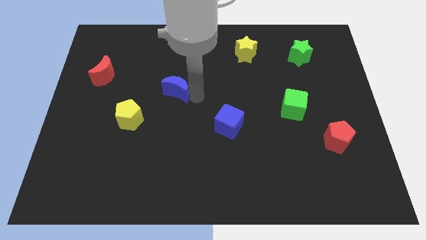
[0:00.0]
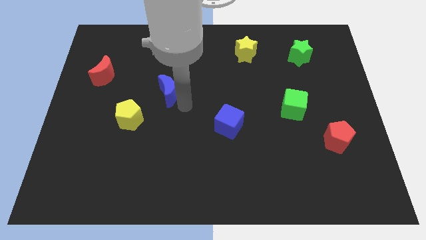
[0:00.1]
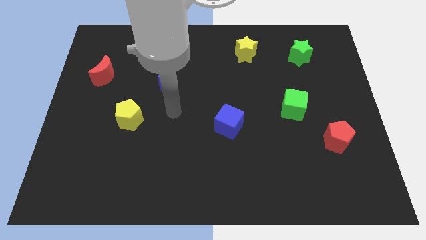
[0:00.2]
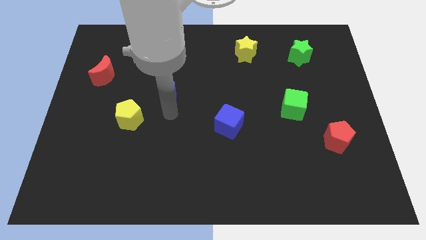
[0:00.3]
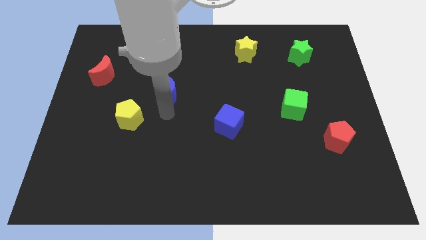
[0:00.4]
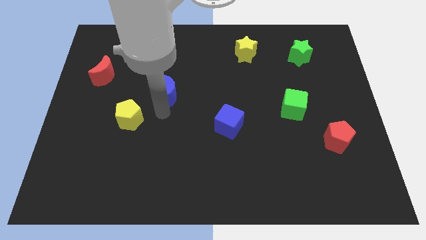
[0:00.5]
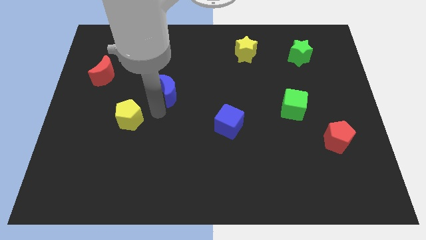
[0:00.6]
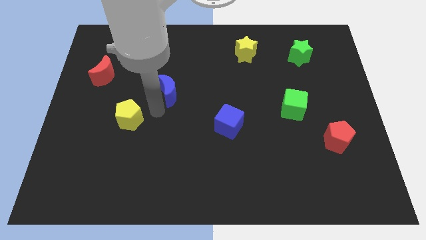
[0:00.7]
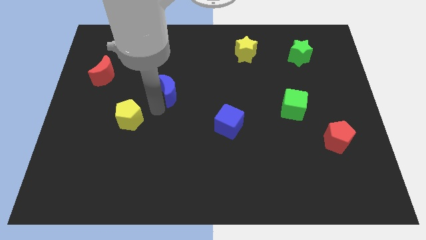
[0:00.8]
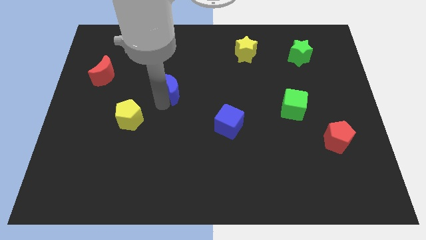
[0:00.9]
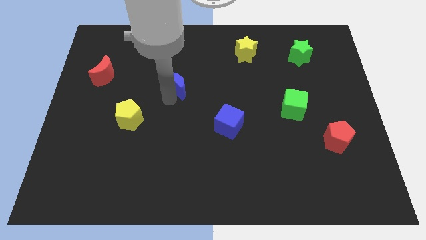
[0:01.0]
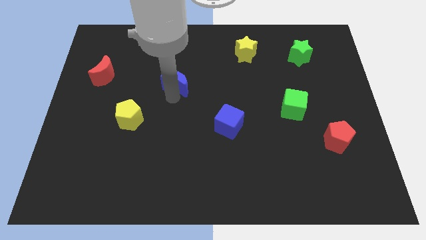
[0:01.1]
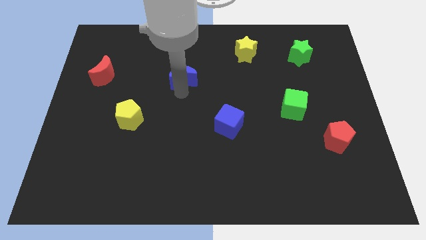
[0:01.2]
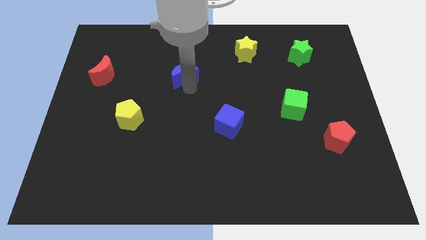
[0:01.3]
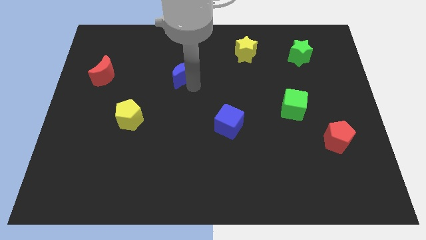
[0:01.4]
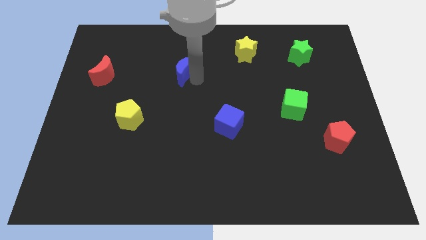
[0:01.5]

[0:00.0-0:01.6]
push the blue moon upward

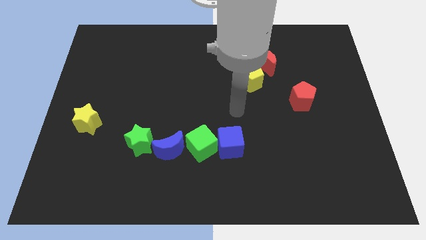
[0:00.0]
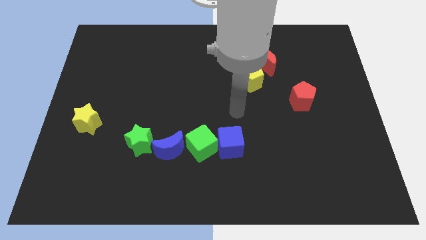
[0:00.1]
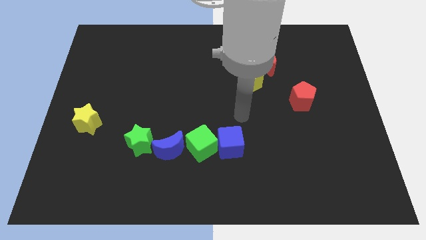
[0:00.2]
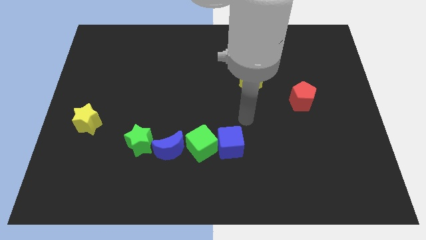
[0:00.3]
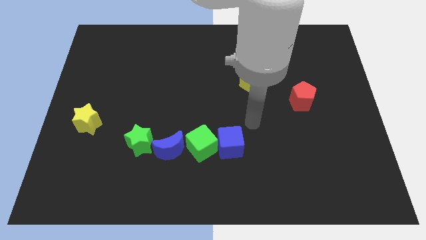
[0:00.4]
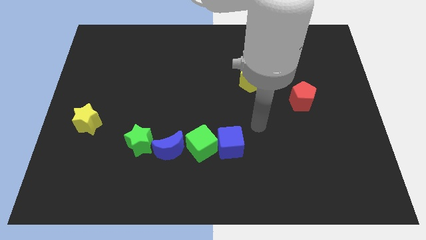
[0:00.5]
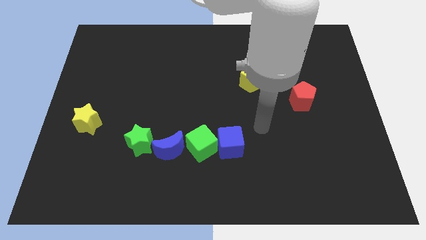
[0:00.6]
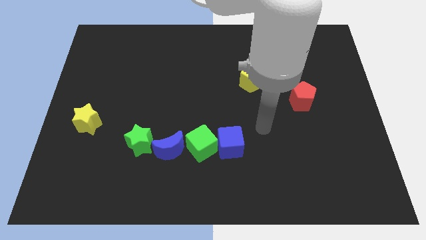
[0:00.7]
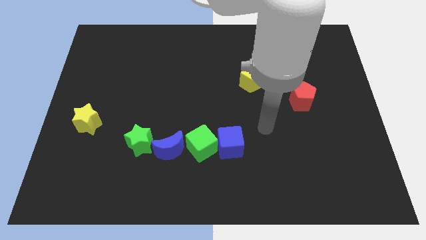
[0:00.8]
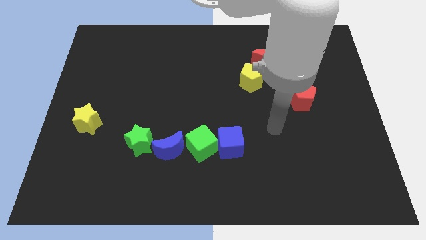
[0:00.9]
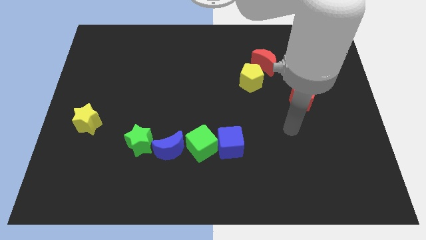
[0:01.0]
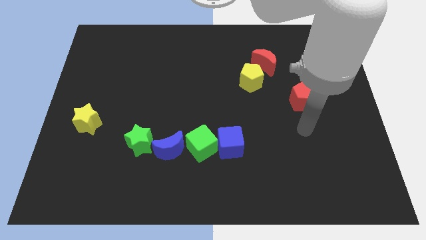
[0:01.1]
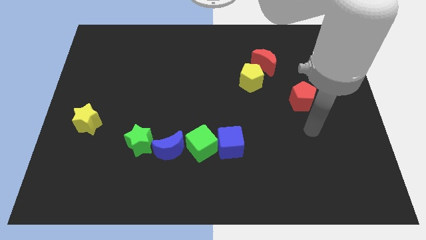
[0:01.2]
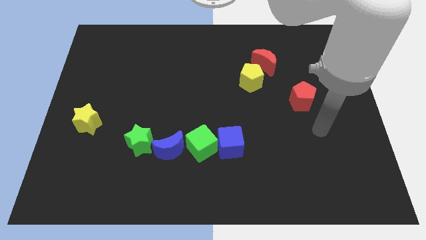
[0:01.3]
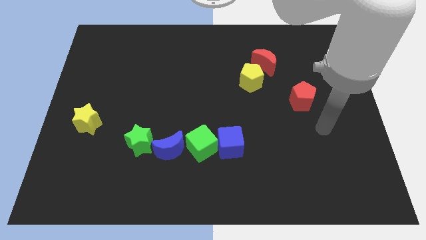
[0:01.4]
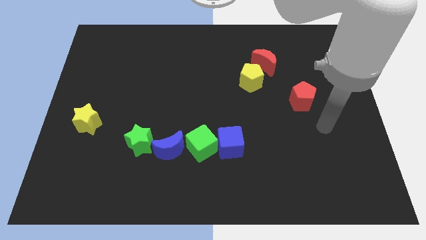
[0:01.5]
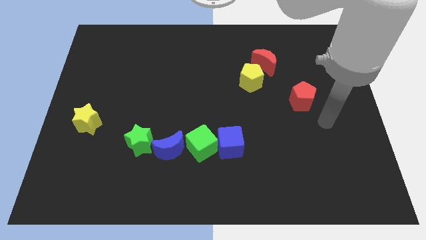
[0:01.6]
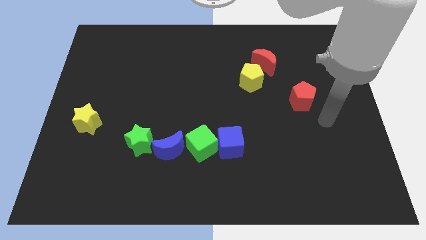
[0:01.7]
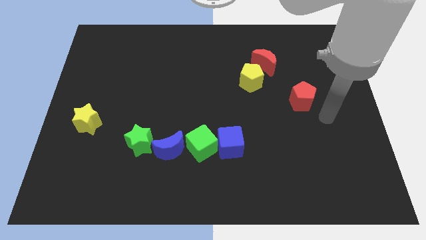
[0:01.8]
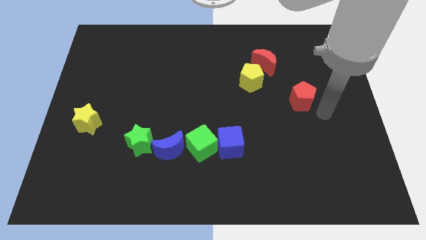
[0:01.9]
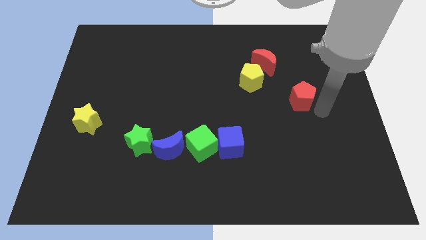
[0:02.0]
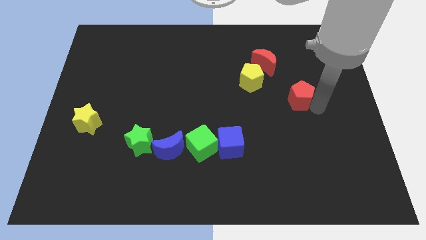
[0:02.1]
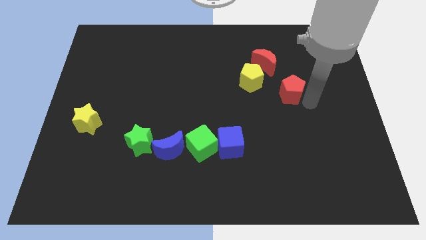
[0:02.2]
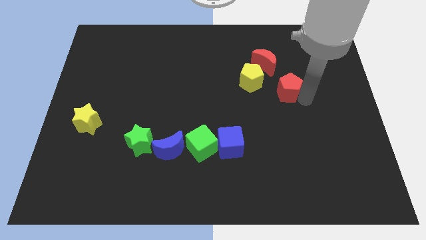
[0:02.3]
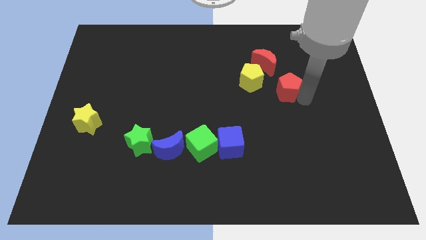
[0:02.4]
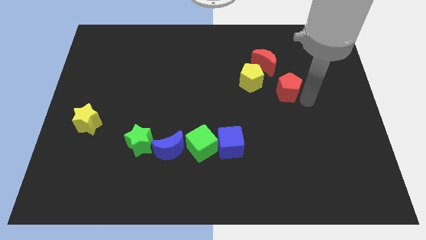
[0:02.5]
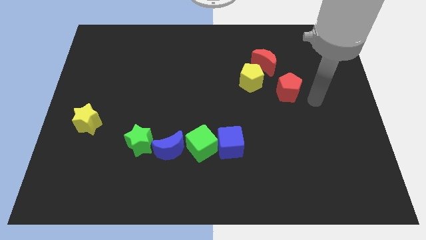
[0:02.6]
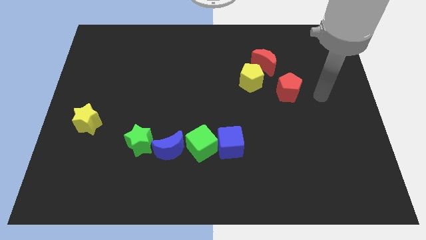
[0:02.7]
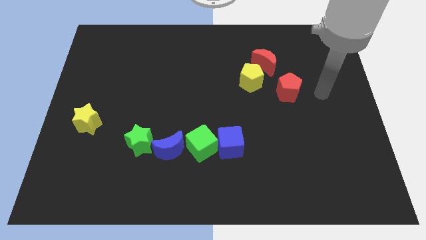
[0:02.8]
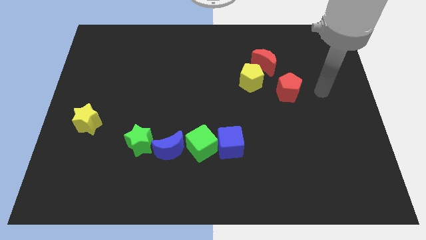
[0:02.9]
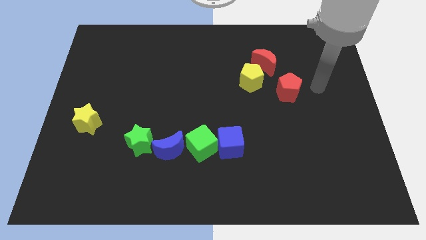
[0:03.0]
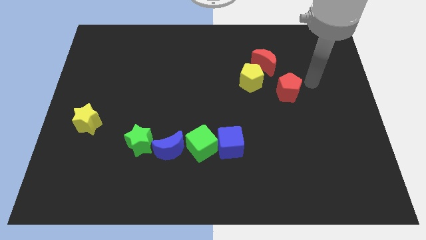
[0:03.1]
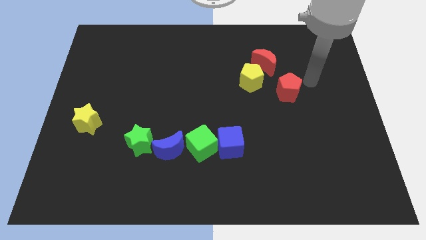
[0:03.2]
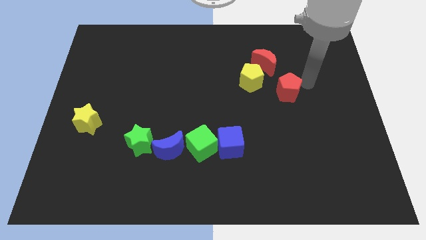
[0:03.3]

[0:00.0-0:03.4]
slide the red pentagon close to the yellow pentagon

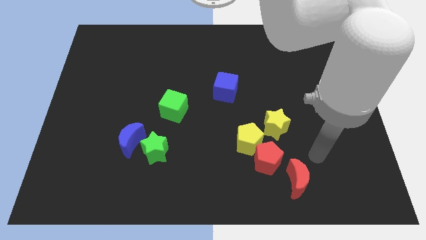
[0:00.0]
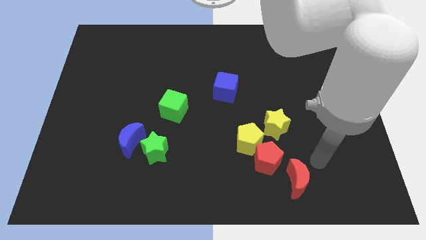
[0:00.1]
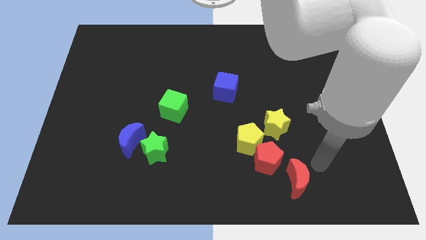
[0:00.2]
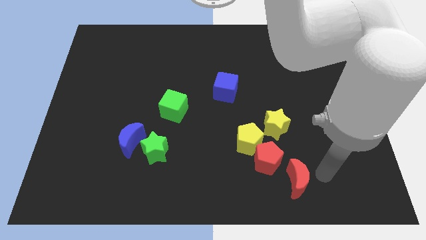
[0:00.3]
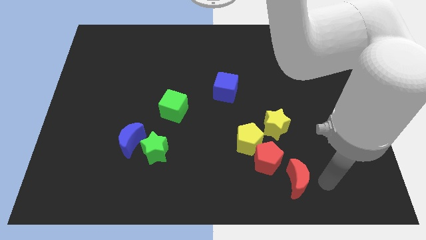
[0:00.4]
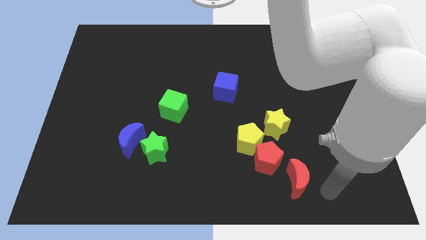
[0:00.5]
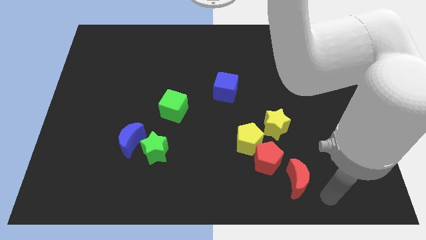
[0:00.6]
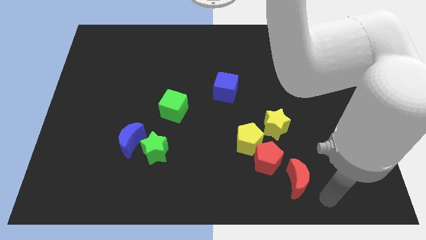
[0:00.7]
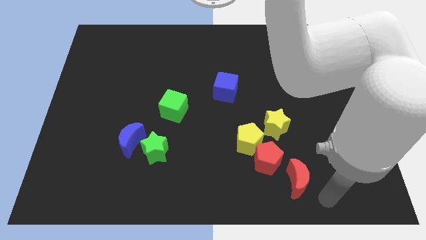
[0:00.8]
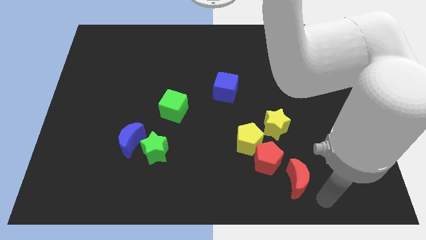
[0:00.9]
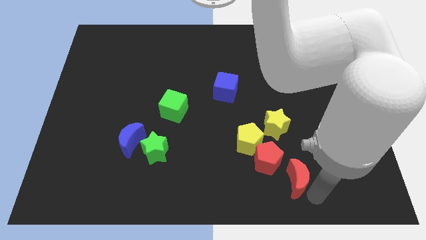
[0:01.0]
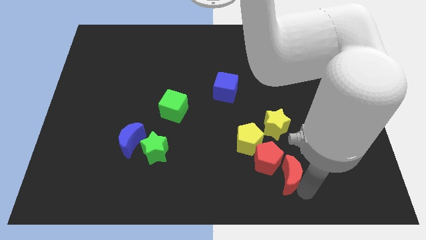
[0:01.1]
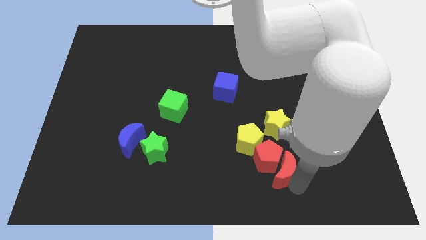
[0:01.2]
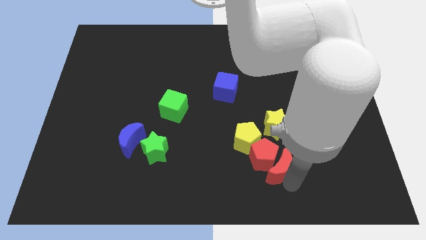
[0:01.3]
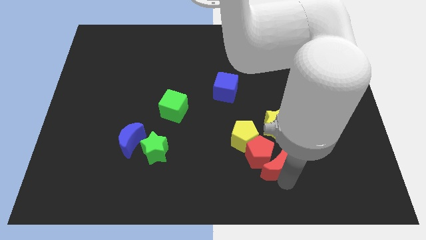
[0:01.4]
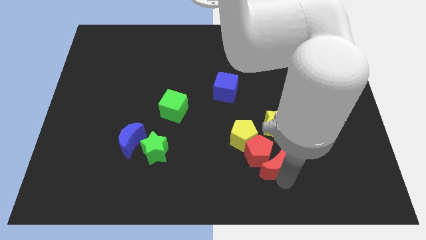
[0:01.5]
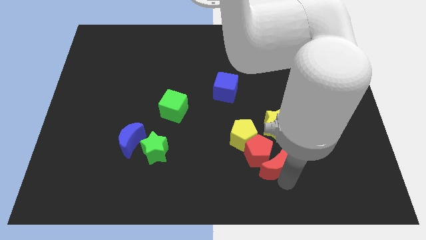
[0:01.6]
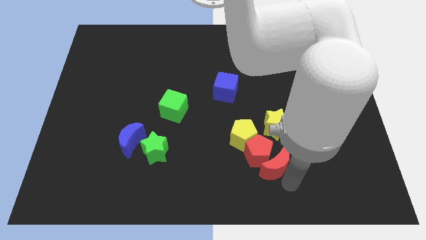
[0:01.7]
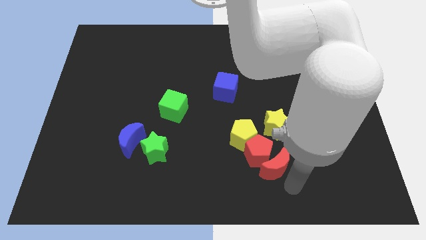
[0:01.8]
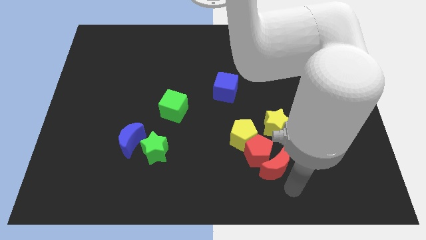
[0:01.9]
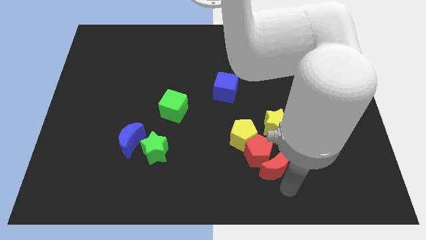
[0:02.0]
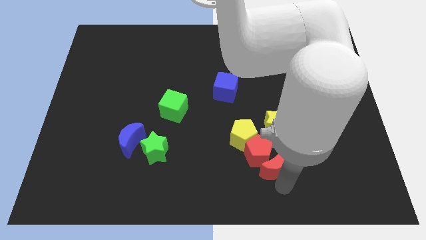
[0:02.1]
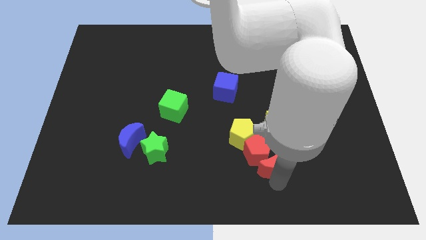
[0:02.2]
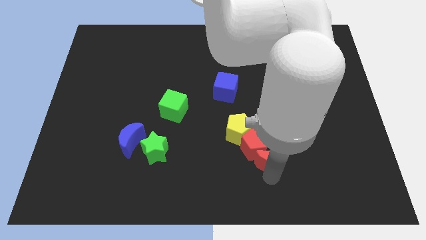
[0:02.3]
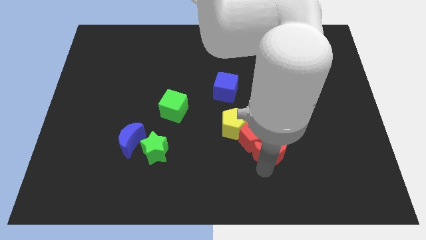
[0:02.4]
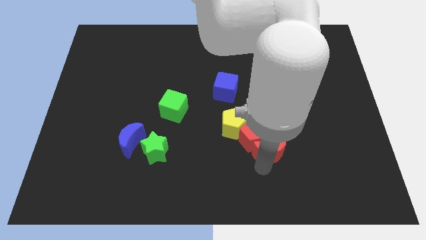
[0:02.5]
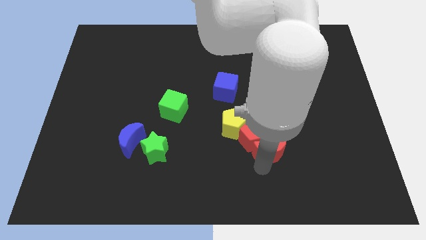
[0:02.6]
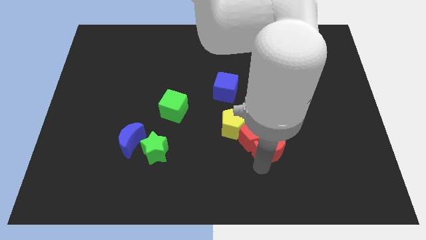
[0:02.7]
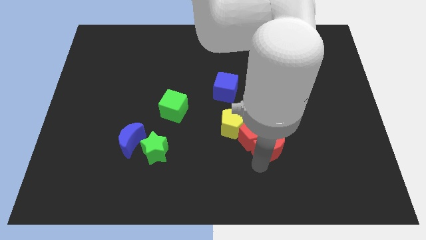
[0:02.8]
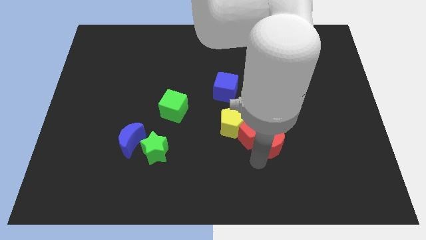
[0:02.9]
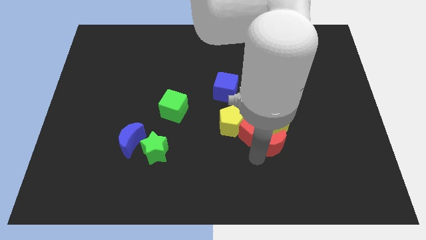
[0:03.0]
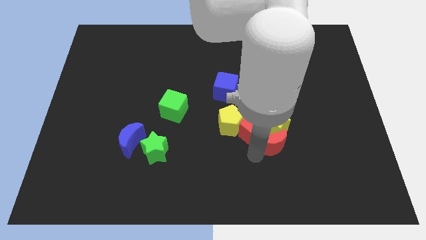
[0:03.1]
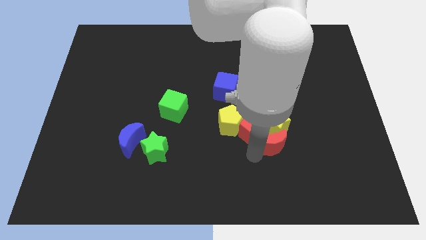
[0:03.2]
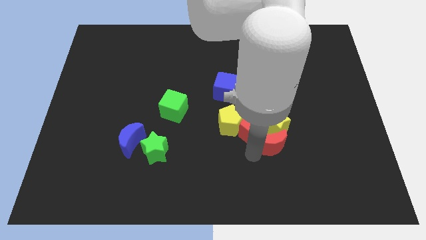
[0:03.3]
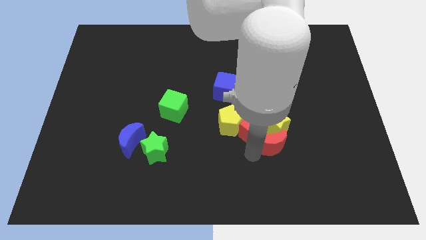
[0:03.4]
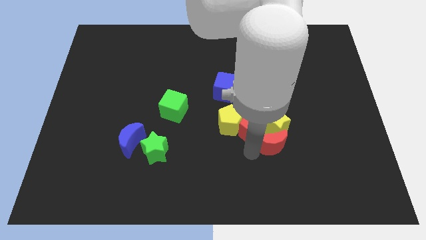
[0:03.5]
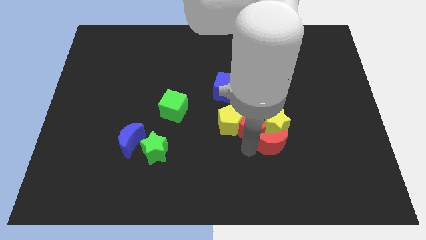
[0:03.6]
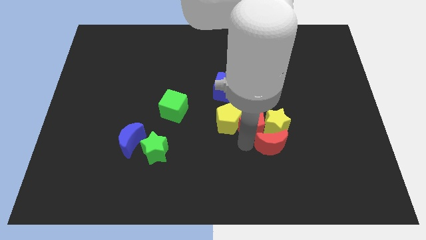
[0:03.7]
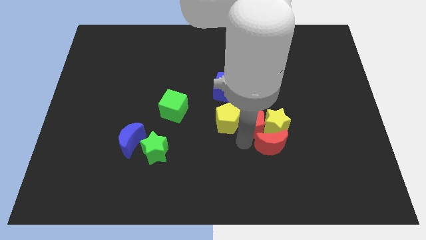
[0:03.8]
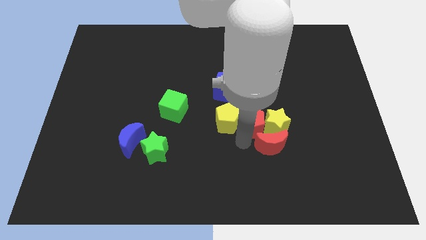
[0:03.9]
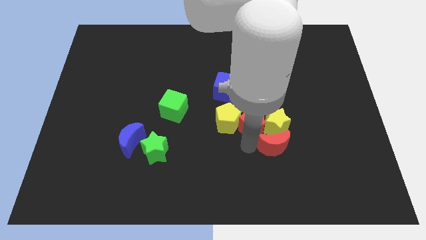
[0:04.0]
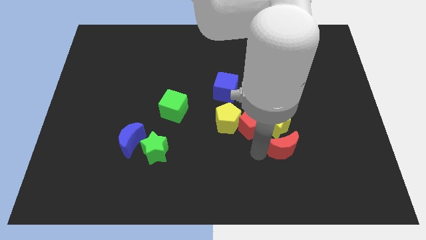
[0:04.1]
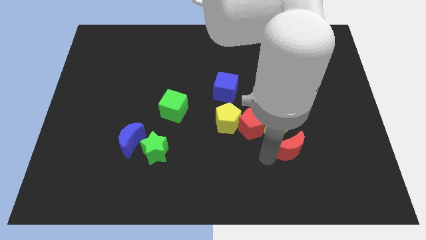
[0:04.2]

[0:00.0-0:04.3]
push the red crescent along with red pentagon
